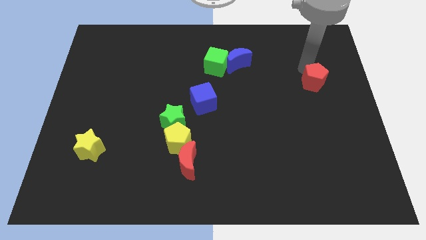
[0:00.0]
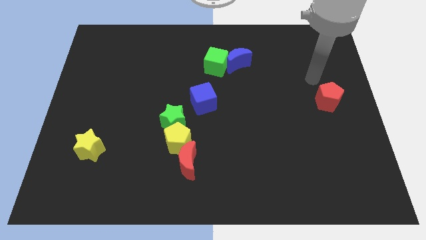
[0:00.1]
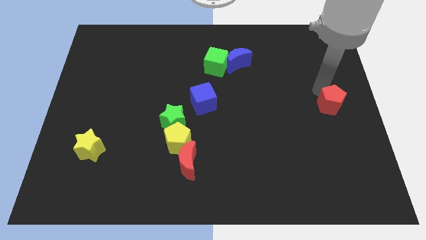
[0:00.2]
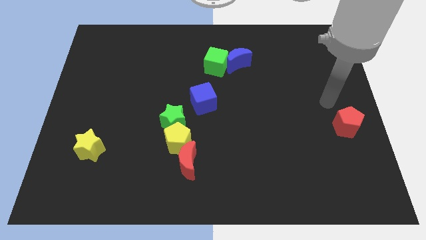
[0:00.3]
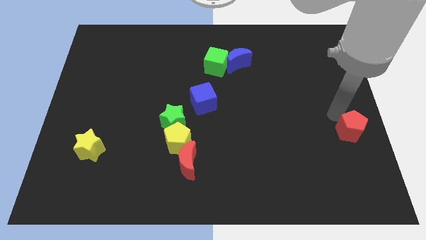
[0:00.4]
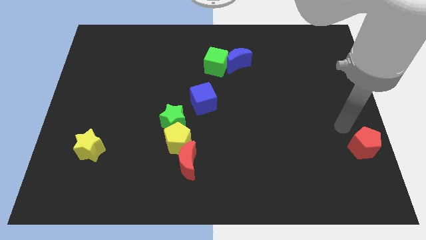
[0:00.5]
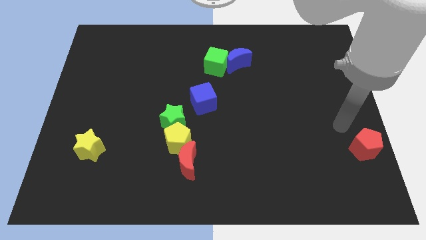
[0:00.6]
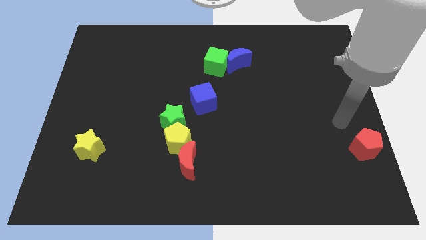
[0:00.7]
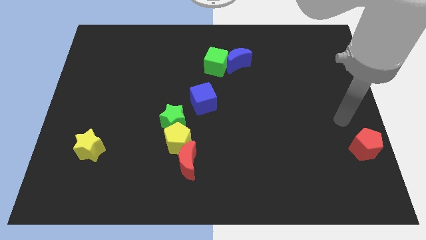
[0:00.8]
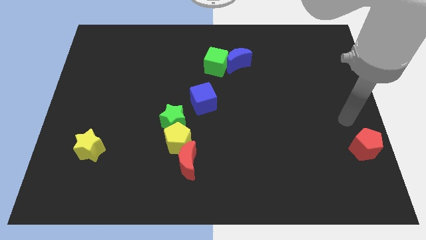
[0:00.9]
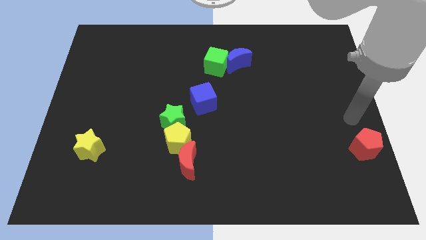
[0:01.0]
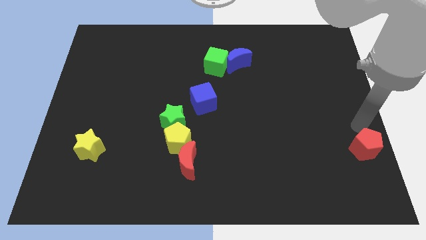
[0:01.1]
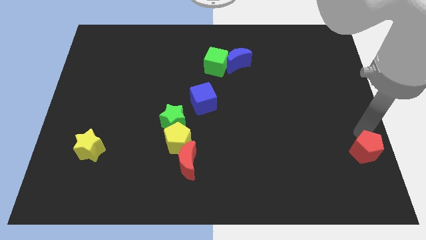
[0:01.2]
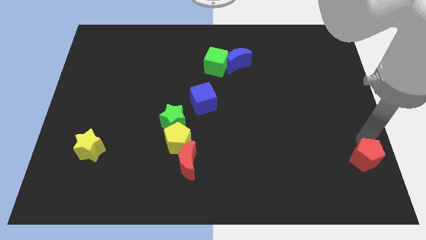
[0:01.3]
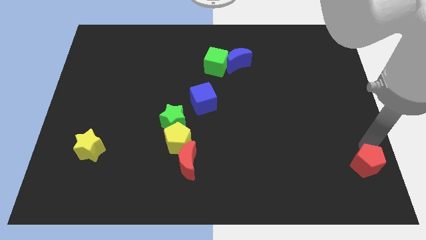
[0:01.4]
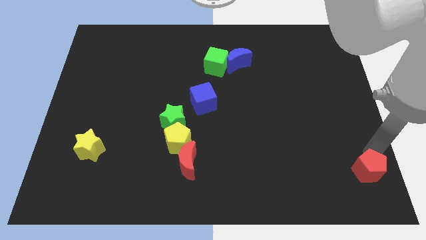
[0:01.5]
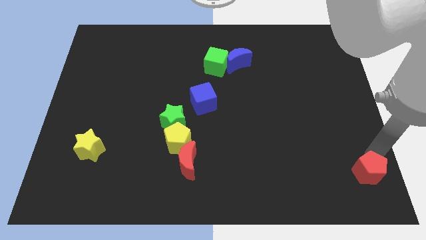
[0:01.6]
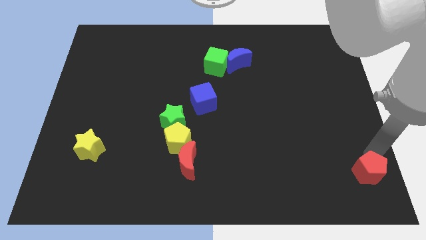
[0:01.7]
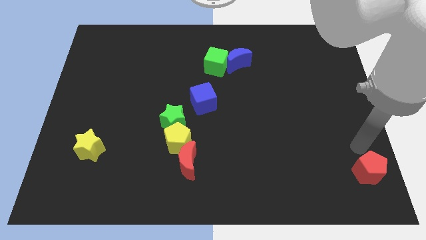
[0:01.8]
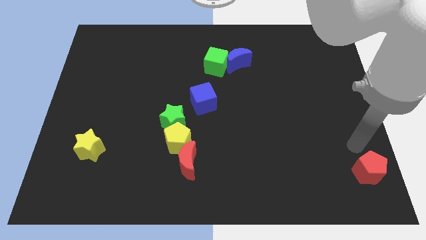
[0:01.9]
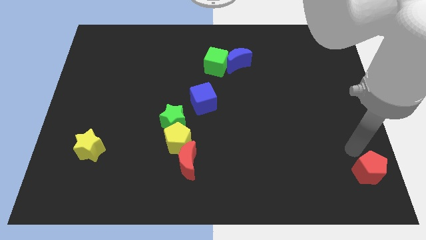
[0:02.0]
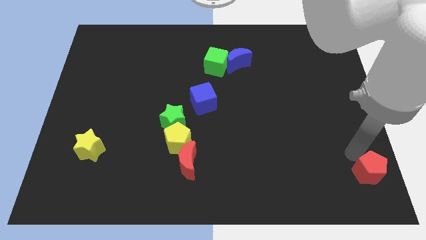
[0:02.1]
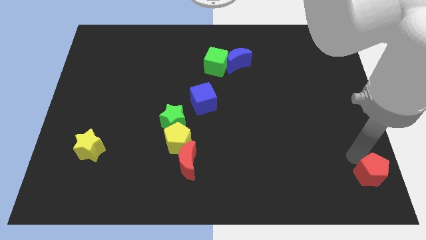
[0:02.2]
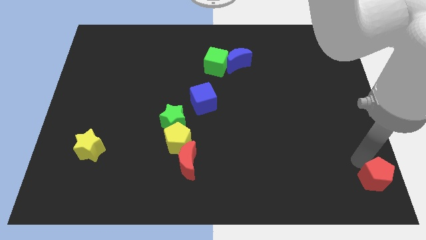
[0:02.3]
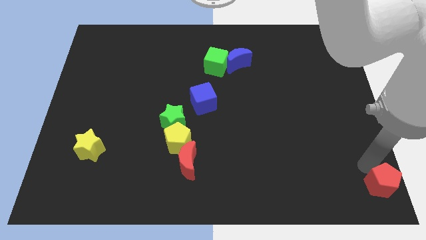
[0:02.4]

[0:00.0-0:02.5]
slide the red pentagon towards the bottom right corner of the board

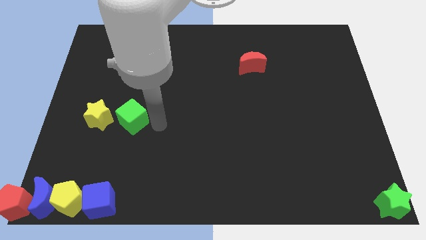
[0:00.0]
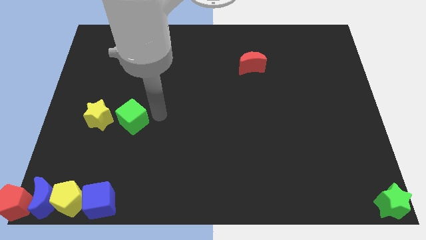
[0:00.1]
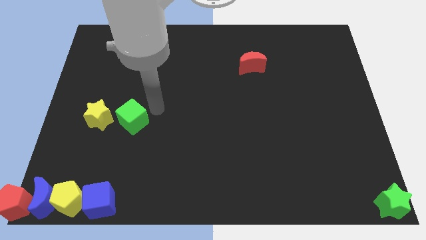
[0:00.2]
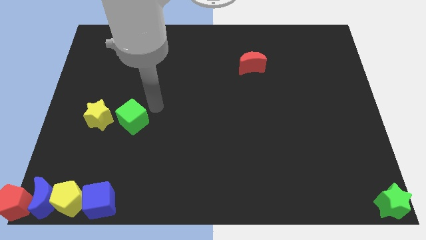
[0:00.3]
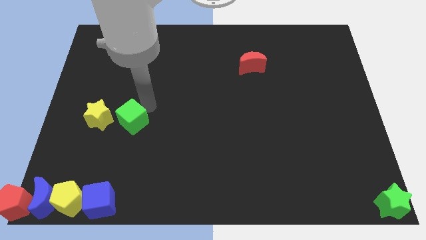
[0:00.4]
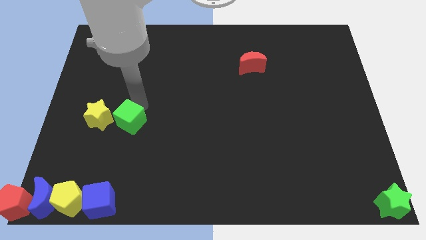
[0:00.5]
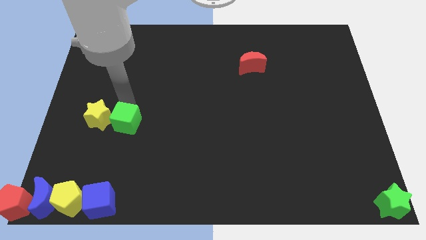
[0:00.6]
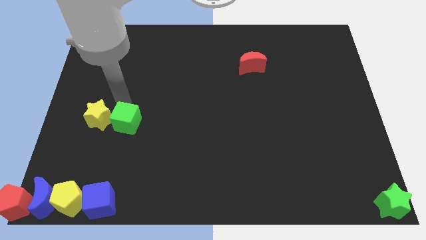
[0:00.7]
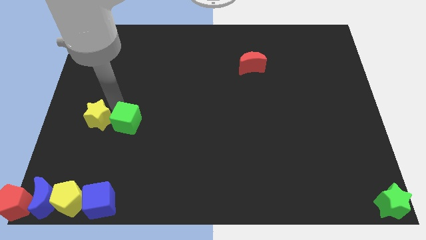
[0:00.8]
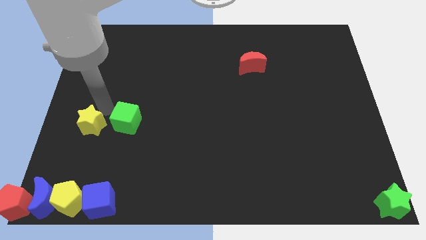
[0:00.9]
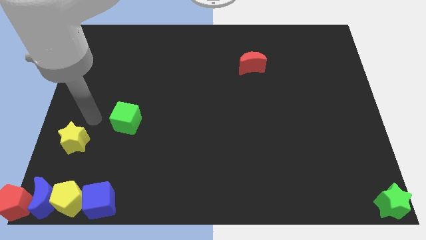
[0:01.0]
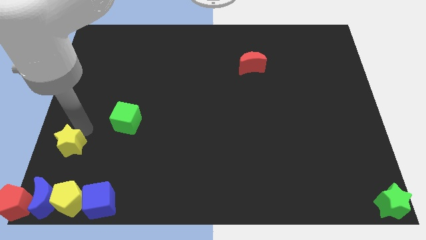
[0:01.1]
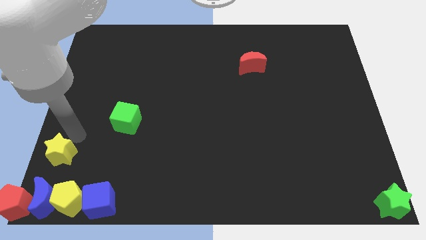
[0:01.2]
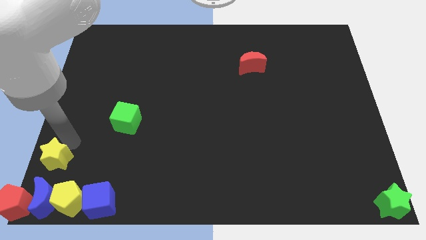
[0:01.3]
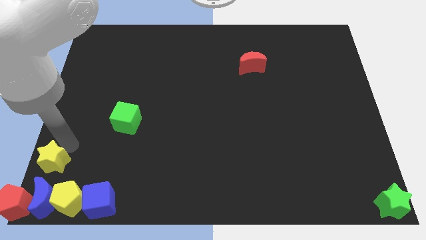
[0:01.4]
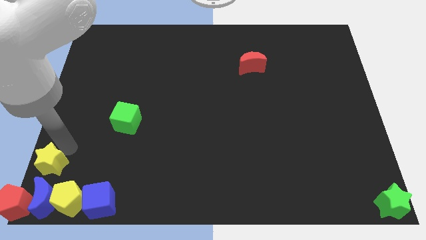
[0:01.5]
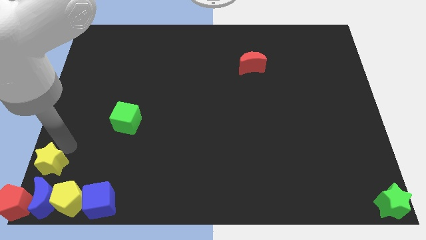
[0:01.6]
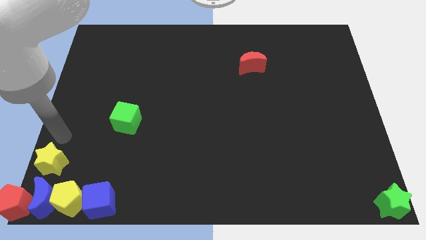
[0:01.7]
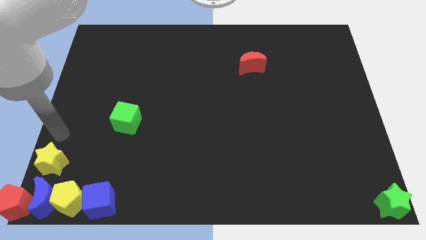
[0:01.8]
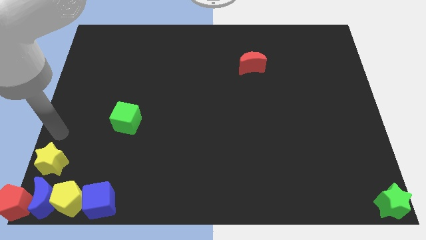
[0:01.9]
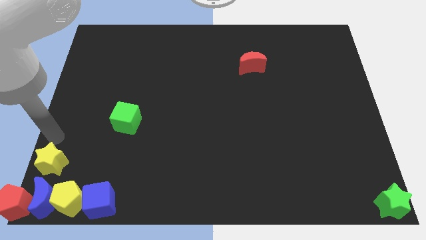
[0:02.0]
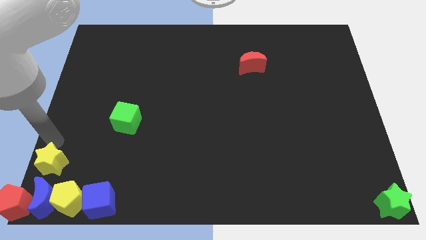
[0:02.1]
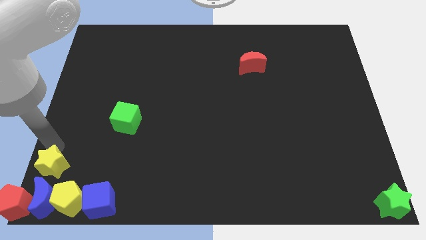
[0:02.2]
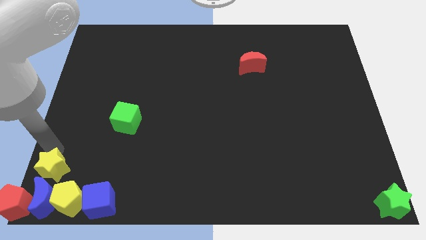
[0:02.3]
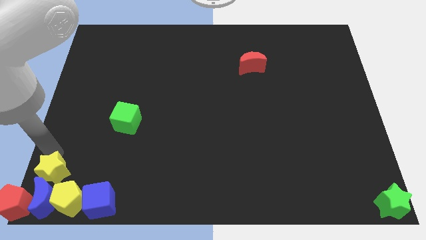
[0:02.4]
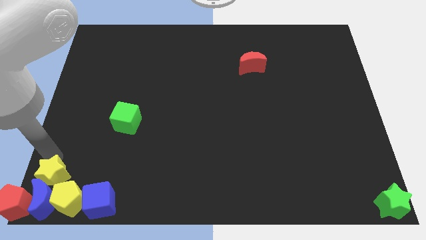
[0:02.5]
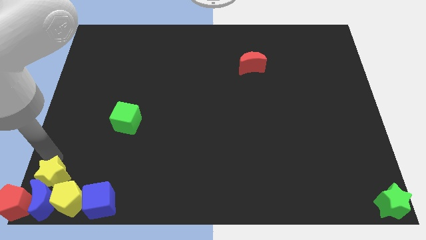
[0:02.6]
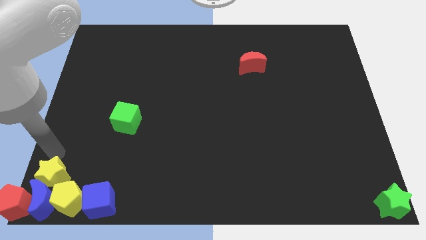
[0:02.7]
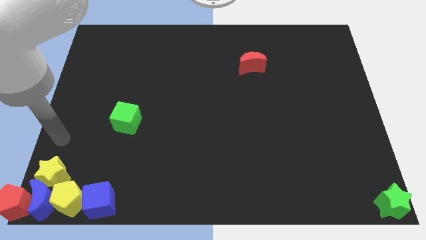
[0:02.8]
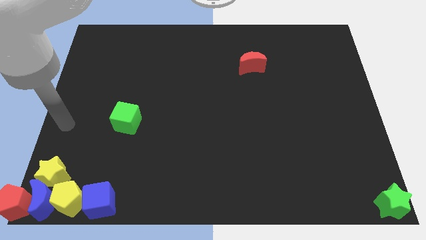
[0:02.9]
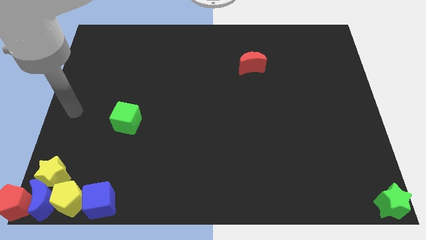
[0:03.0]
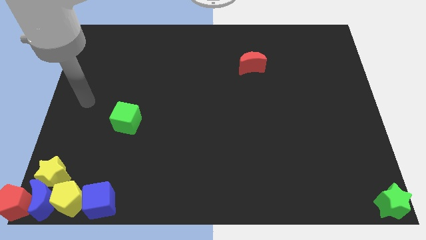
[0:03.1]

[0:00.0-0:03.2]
push the yellow star to the top side of the blue moon

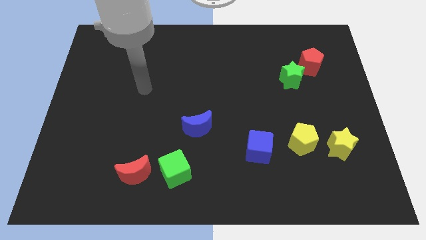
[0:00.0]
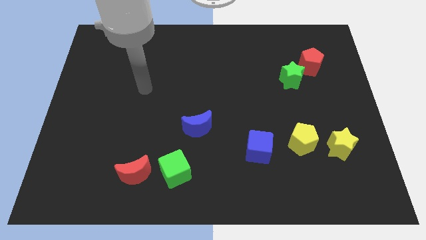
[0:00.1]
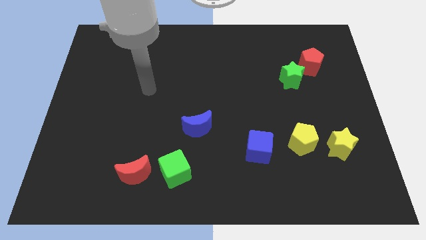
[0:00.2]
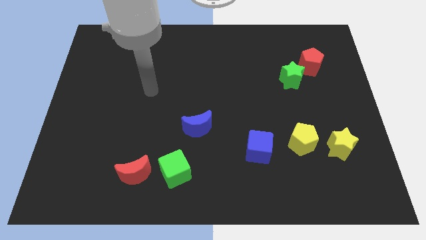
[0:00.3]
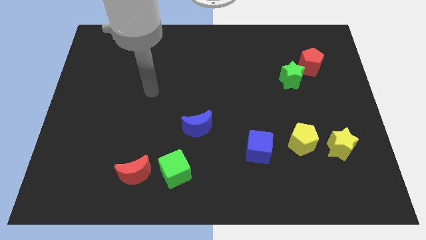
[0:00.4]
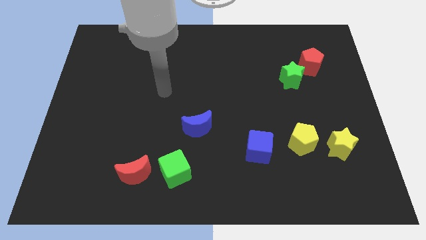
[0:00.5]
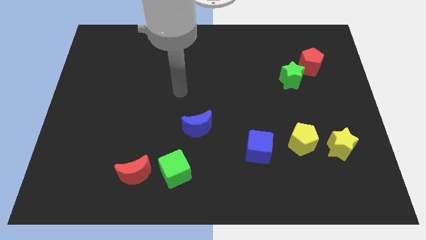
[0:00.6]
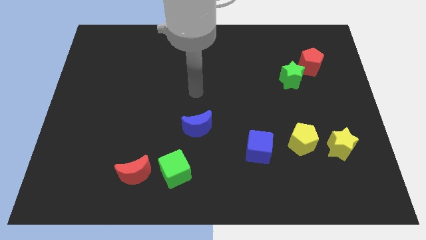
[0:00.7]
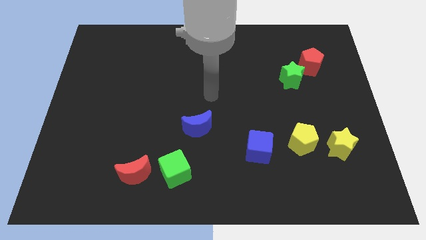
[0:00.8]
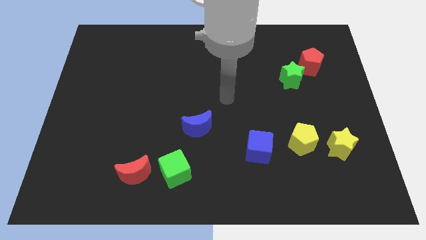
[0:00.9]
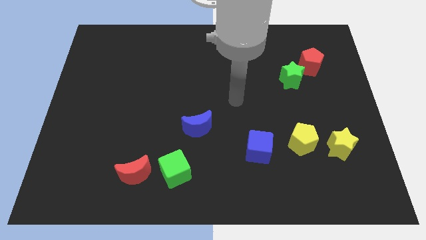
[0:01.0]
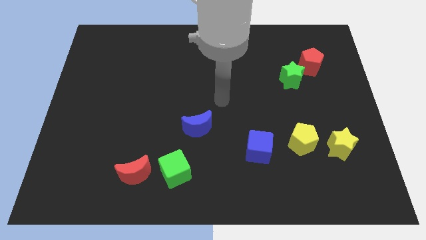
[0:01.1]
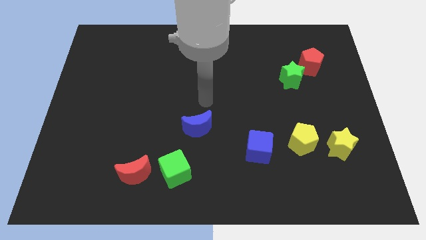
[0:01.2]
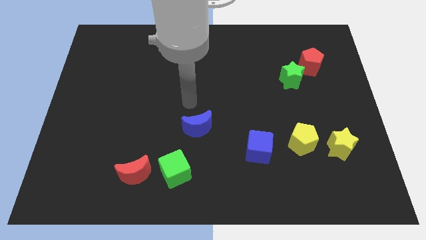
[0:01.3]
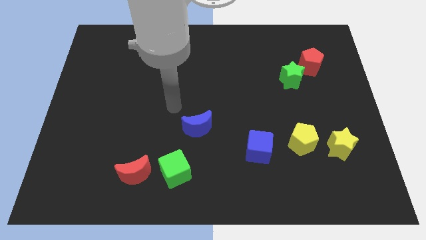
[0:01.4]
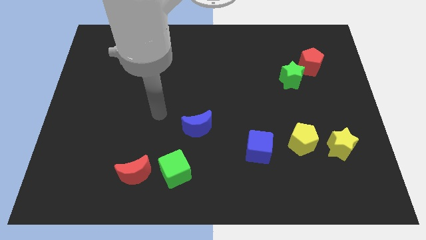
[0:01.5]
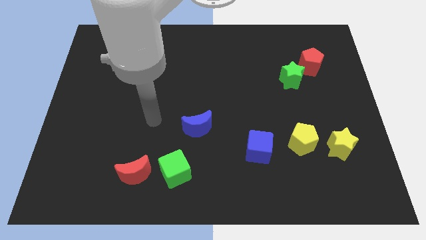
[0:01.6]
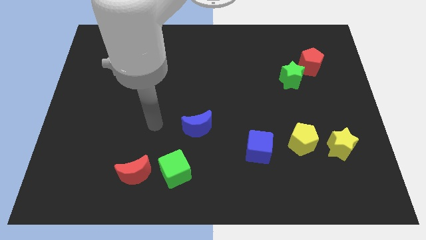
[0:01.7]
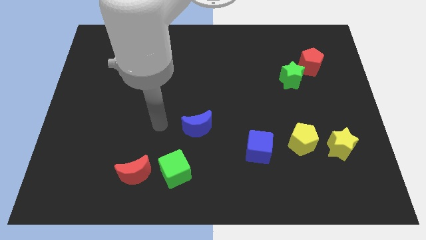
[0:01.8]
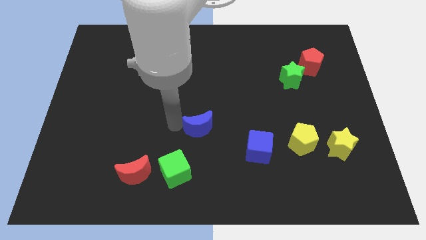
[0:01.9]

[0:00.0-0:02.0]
move the arm above to the blue crescent

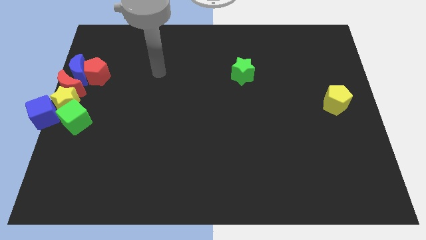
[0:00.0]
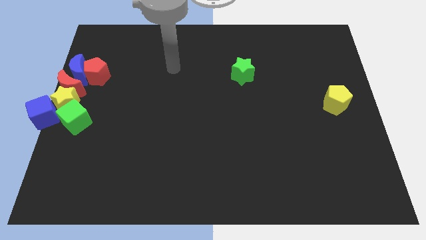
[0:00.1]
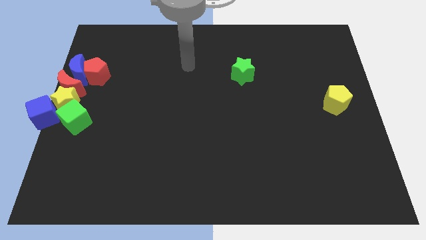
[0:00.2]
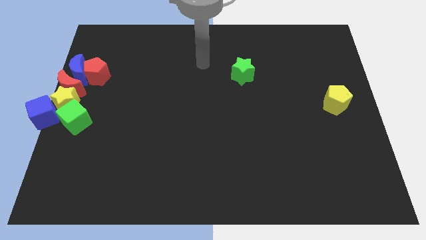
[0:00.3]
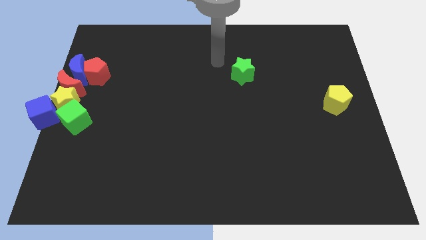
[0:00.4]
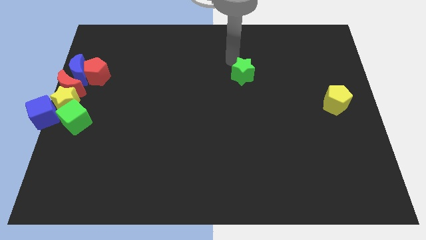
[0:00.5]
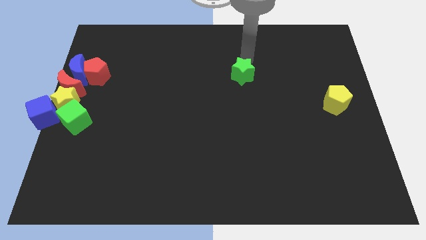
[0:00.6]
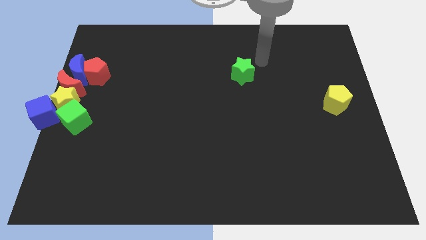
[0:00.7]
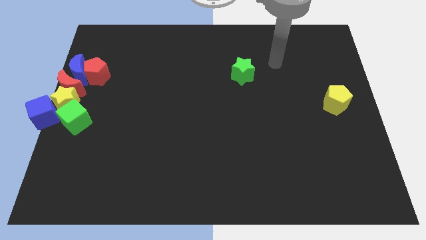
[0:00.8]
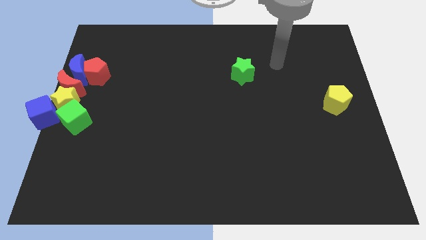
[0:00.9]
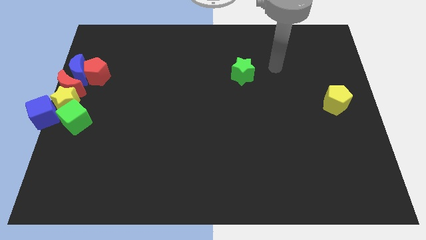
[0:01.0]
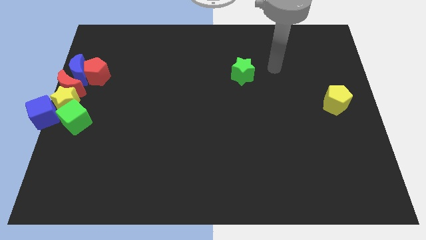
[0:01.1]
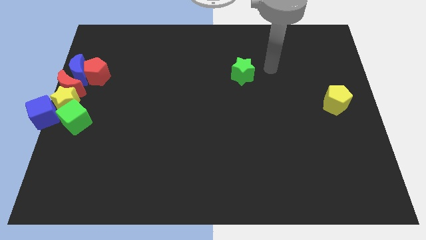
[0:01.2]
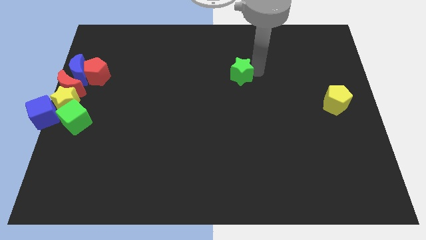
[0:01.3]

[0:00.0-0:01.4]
touch the right side of the green star
